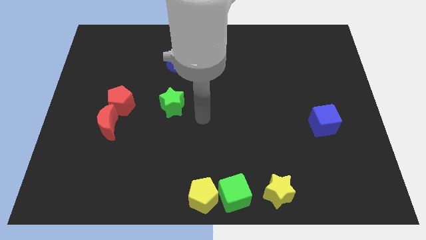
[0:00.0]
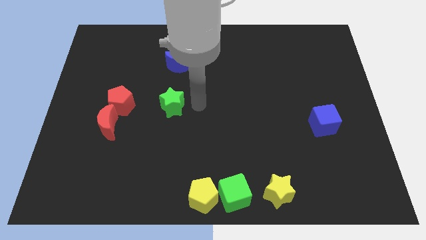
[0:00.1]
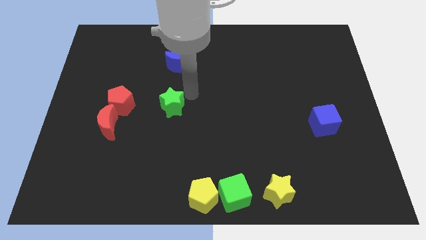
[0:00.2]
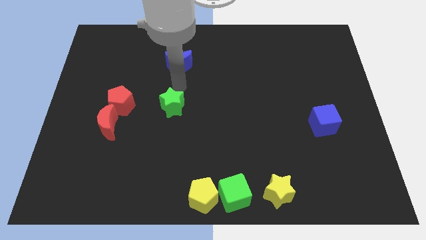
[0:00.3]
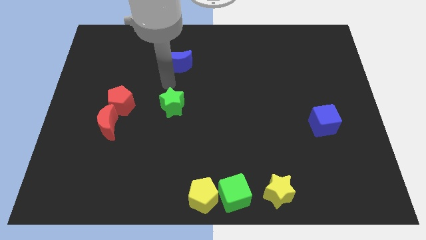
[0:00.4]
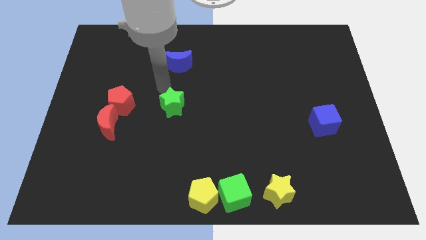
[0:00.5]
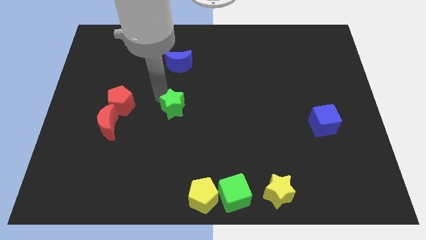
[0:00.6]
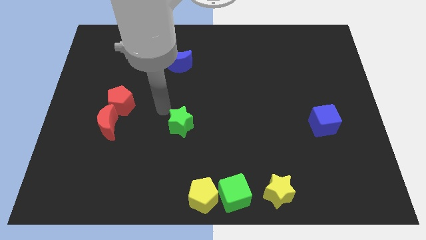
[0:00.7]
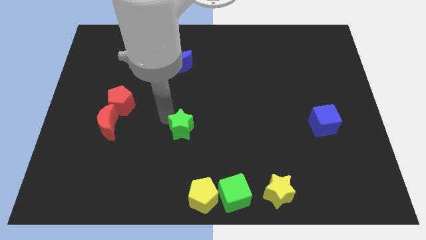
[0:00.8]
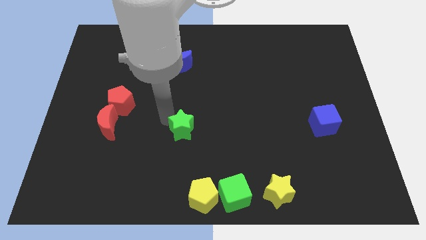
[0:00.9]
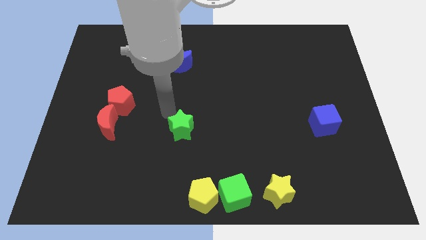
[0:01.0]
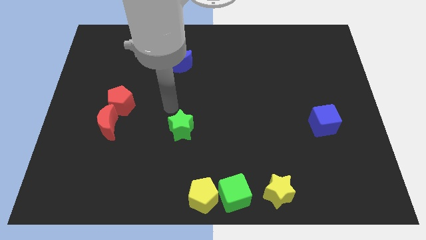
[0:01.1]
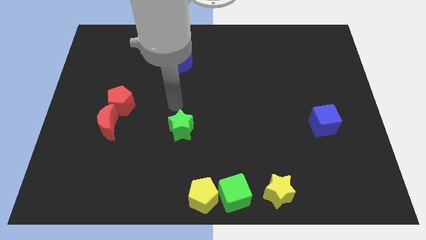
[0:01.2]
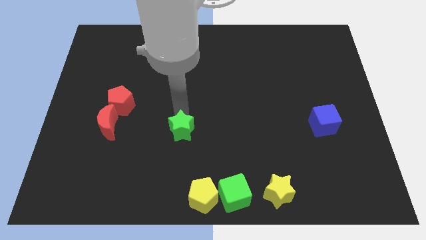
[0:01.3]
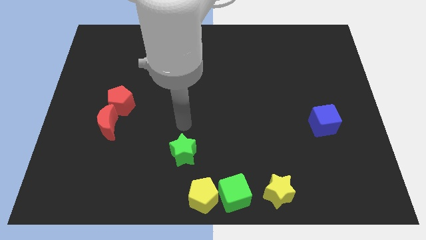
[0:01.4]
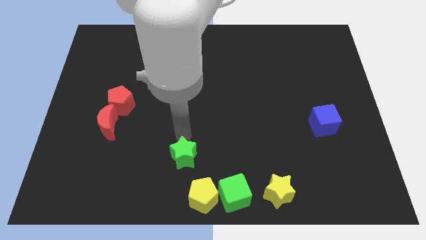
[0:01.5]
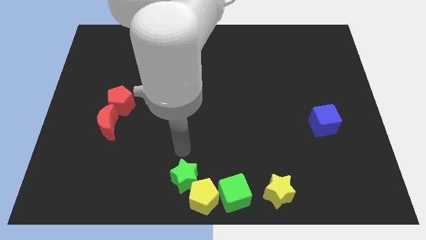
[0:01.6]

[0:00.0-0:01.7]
push the green star into the yellow pentagon

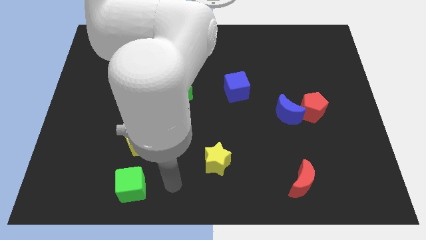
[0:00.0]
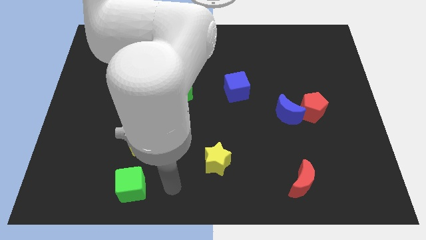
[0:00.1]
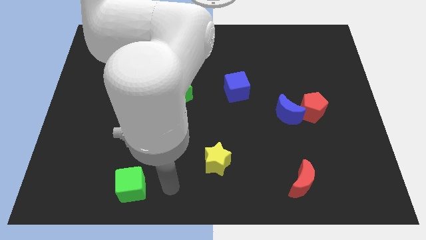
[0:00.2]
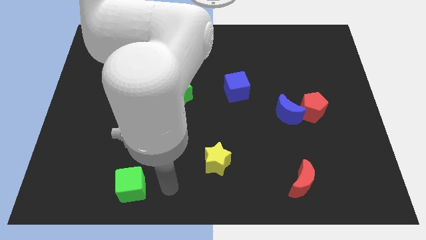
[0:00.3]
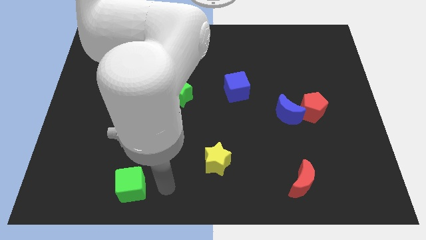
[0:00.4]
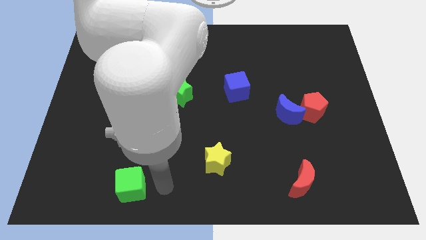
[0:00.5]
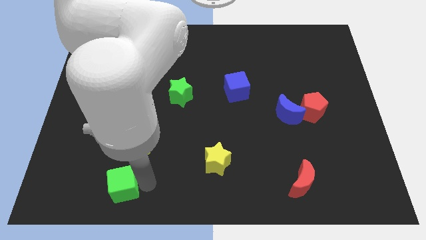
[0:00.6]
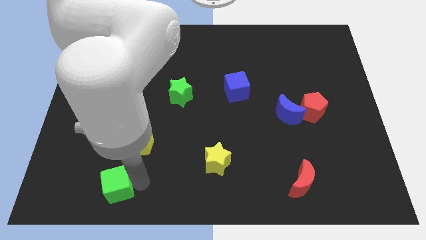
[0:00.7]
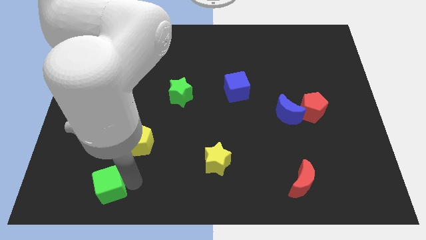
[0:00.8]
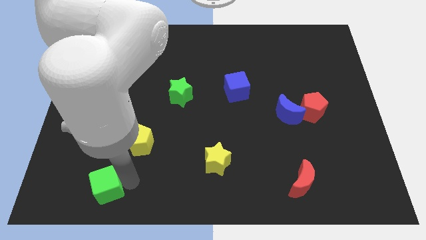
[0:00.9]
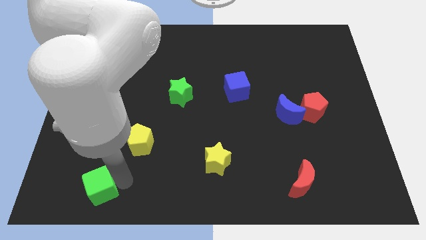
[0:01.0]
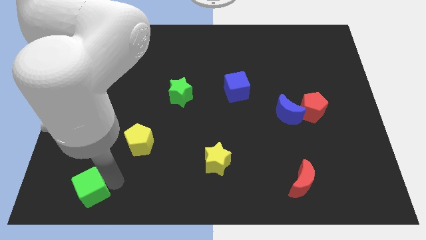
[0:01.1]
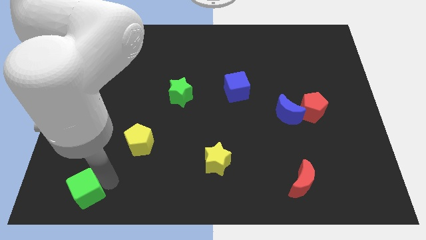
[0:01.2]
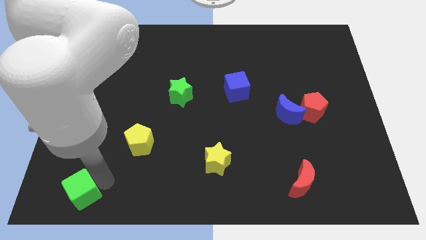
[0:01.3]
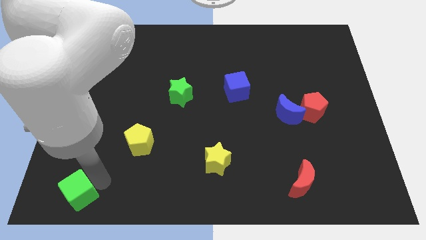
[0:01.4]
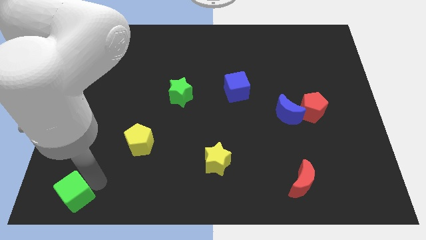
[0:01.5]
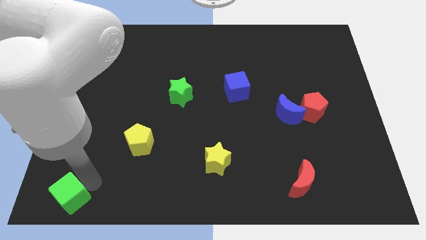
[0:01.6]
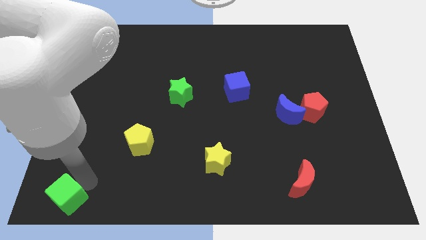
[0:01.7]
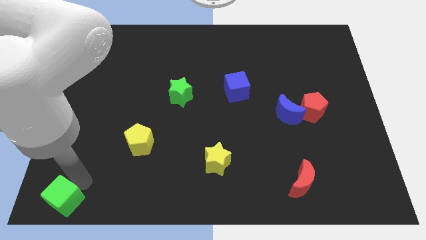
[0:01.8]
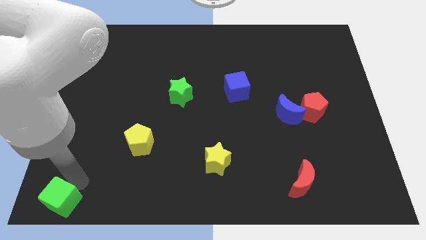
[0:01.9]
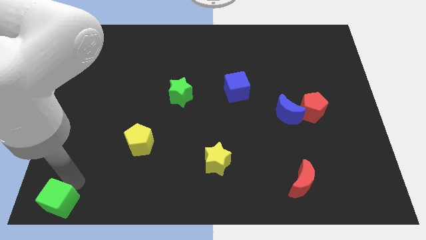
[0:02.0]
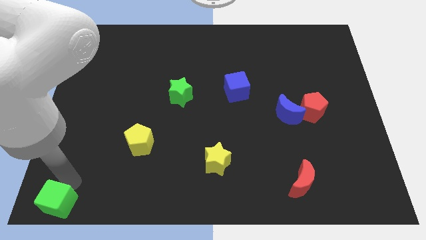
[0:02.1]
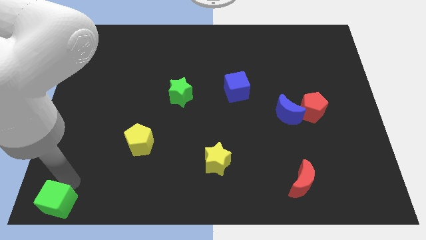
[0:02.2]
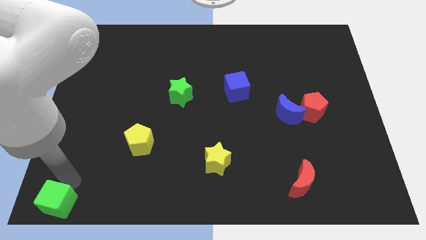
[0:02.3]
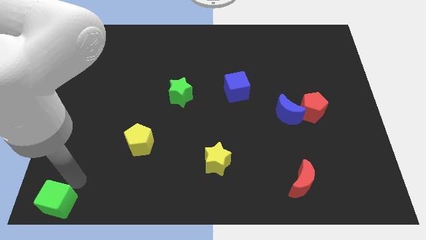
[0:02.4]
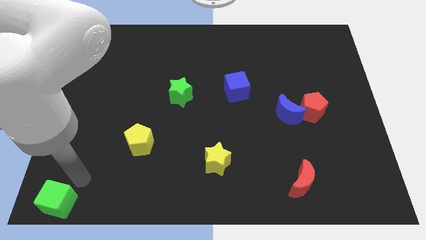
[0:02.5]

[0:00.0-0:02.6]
push the green cube to the bottom left of the board

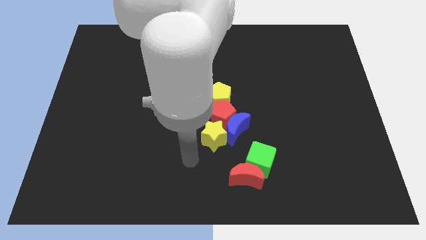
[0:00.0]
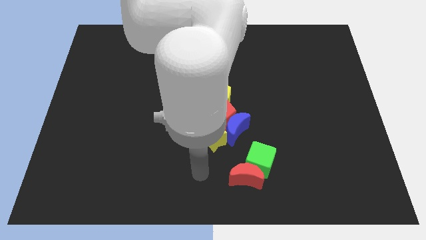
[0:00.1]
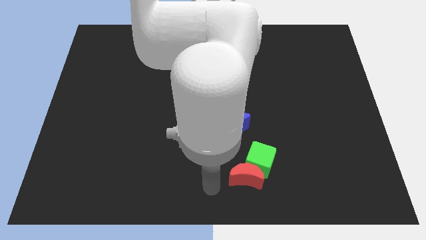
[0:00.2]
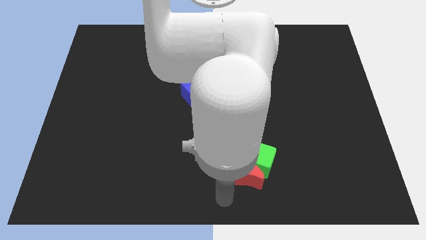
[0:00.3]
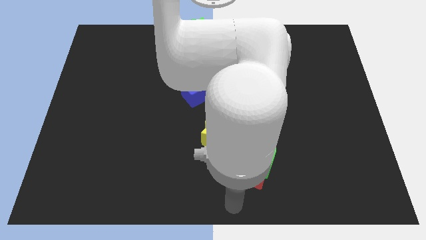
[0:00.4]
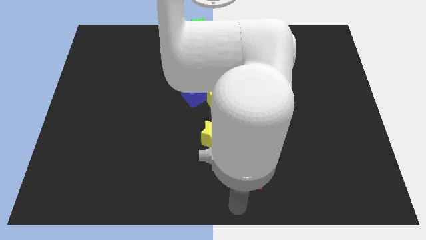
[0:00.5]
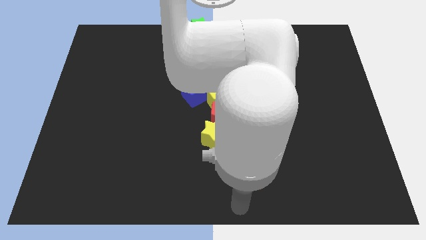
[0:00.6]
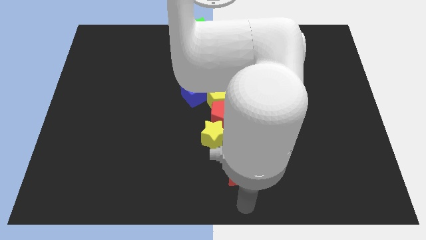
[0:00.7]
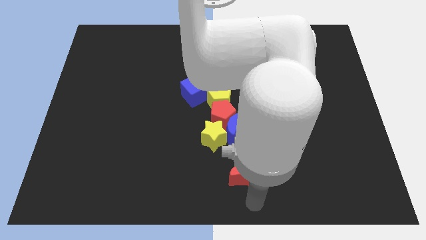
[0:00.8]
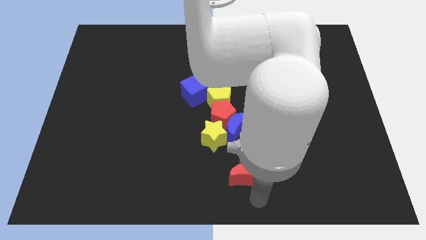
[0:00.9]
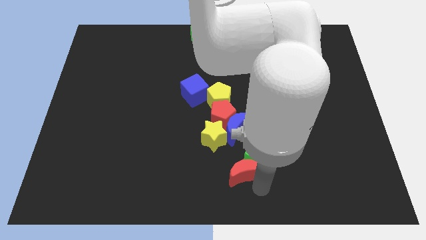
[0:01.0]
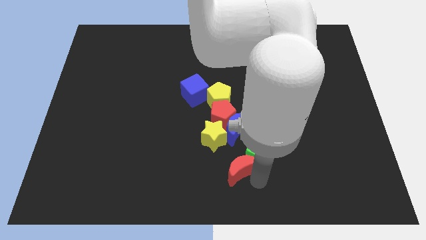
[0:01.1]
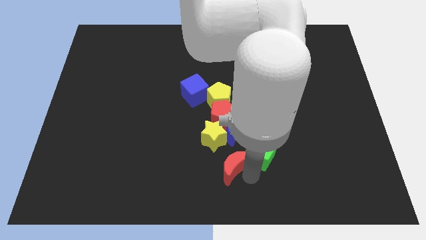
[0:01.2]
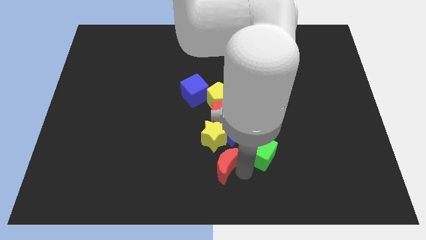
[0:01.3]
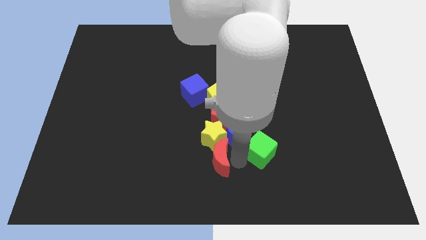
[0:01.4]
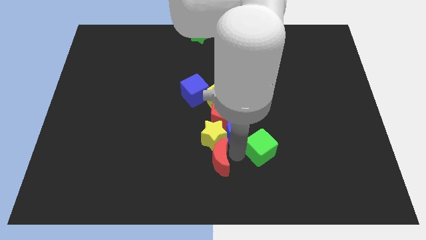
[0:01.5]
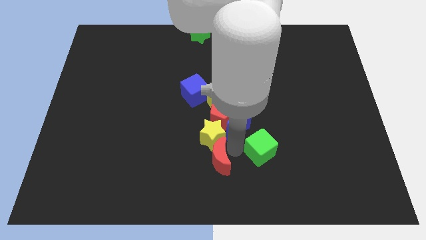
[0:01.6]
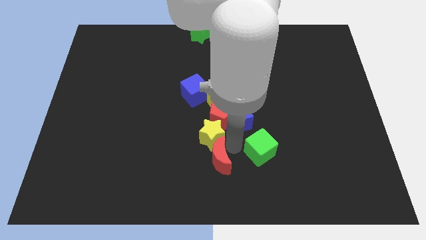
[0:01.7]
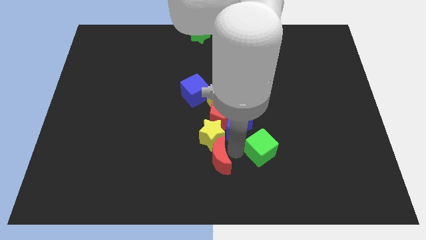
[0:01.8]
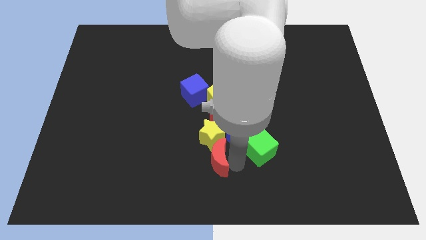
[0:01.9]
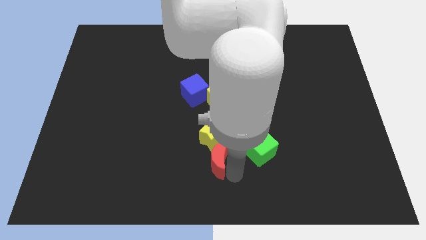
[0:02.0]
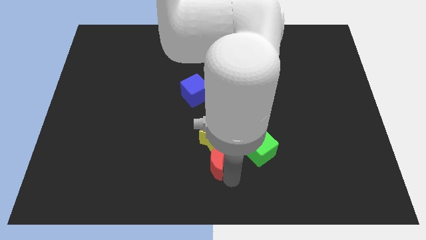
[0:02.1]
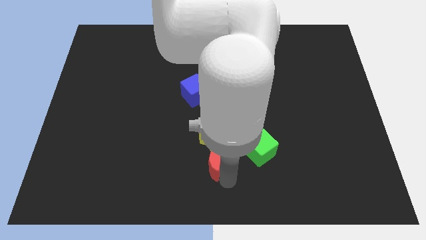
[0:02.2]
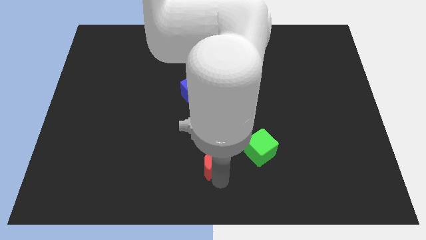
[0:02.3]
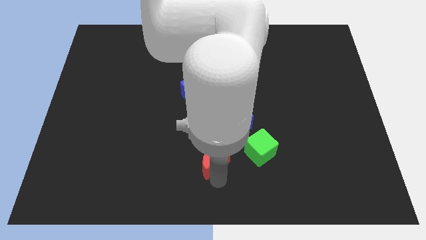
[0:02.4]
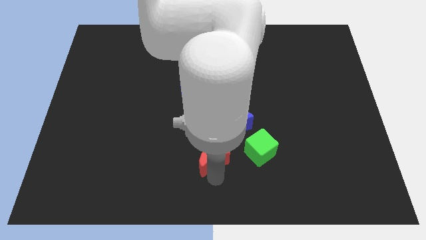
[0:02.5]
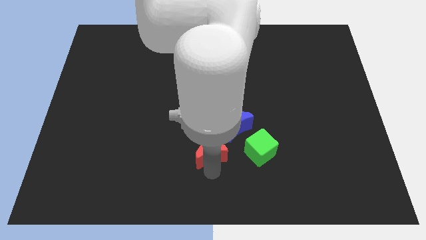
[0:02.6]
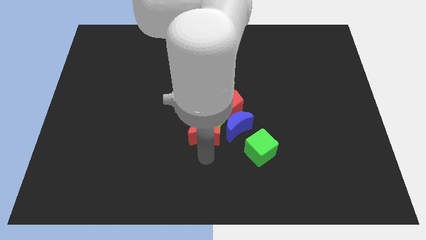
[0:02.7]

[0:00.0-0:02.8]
push the red moon into the group of blocks

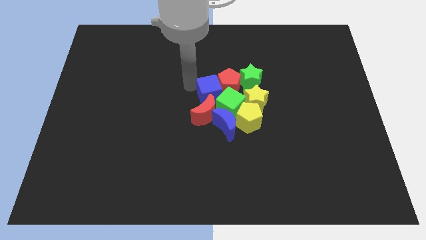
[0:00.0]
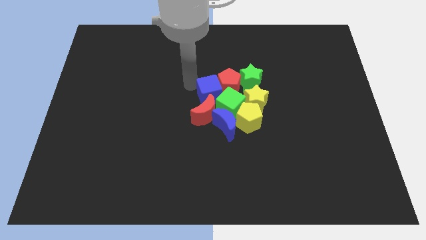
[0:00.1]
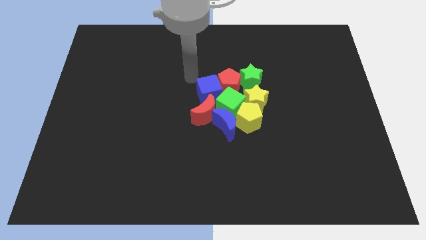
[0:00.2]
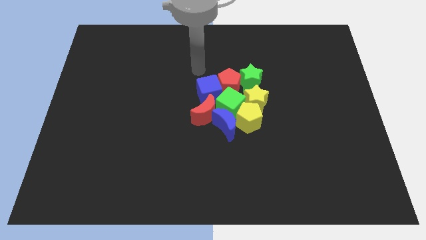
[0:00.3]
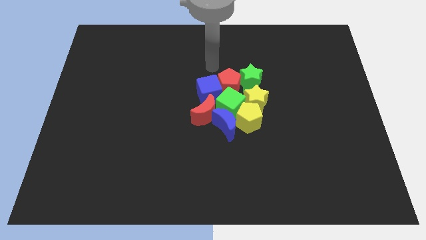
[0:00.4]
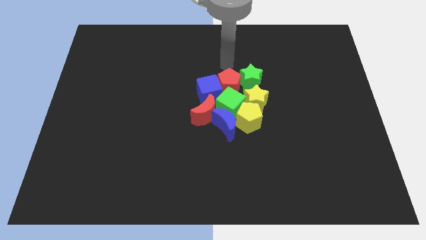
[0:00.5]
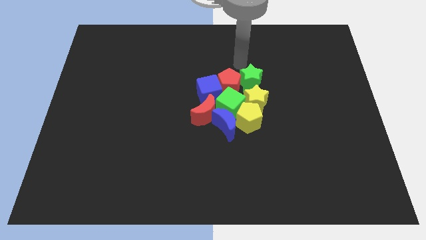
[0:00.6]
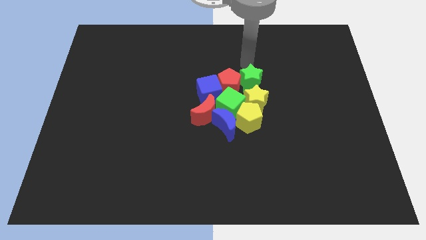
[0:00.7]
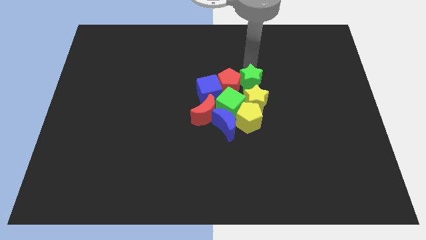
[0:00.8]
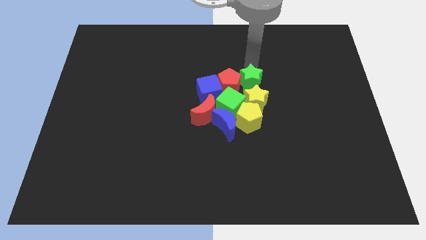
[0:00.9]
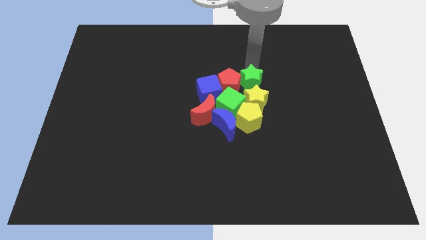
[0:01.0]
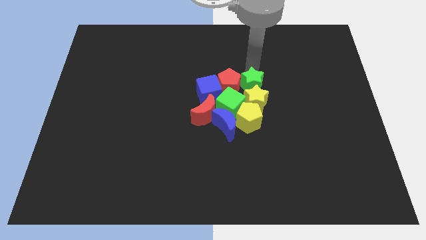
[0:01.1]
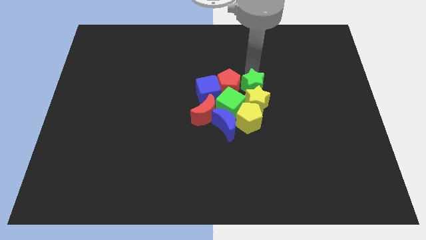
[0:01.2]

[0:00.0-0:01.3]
push green star into the yellow star

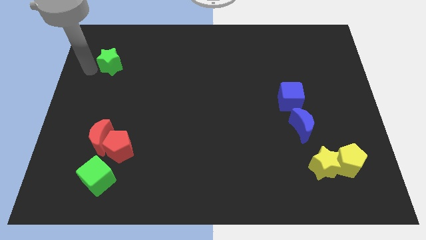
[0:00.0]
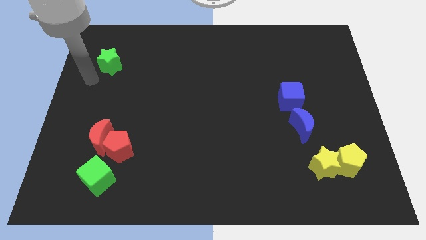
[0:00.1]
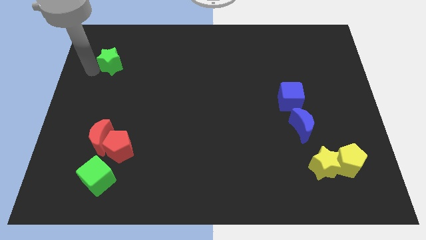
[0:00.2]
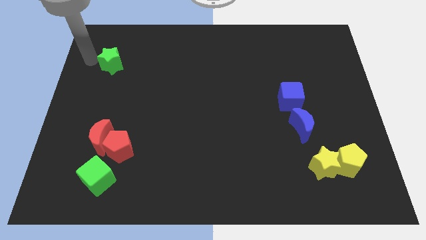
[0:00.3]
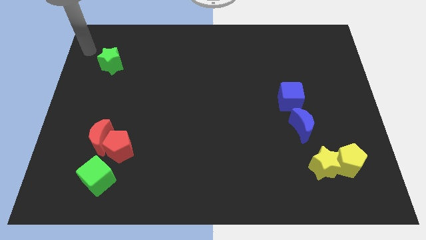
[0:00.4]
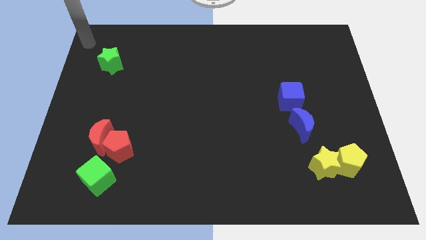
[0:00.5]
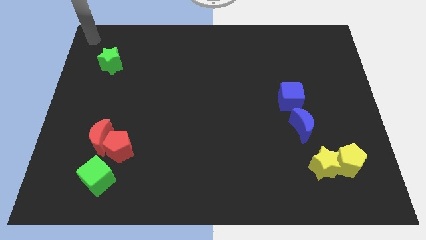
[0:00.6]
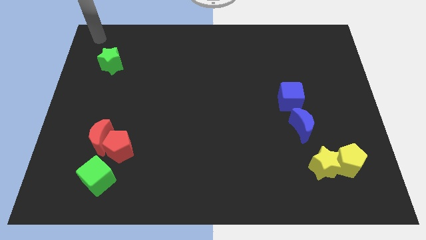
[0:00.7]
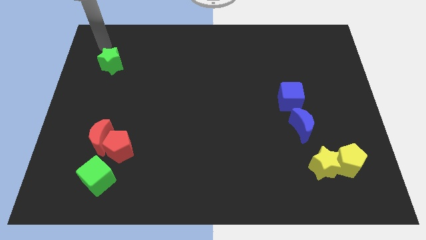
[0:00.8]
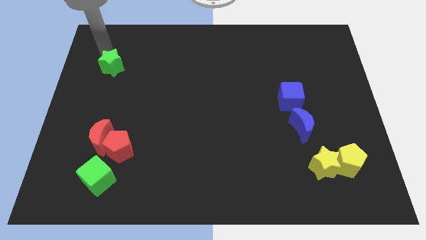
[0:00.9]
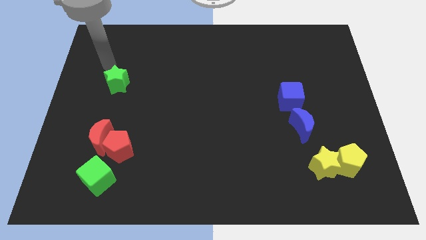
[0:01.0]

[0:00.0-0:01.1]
place the green star above the red crescent
